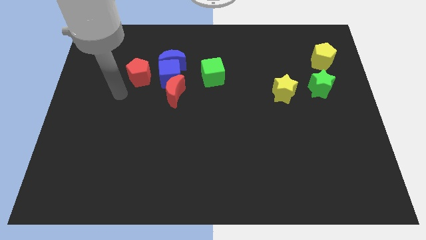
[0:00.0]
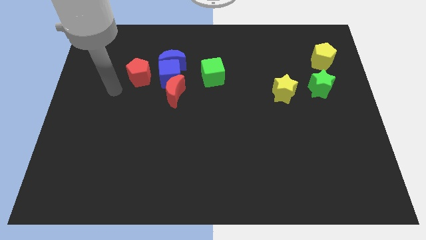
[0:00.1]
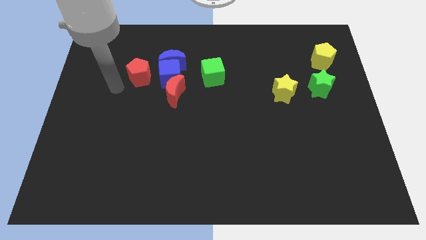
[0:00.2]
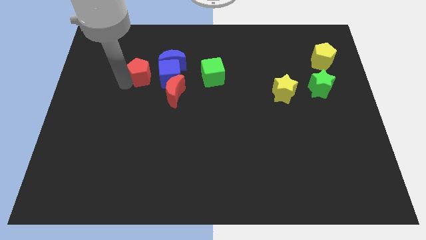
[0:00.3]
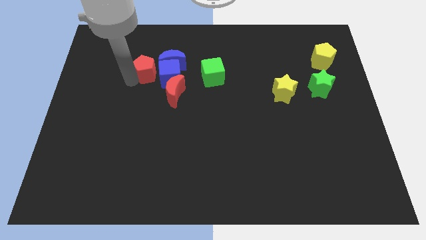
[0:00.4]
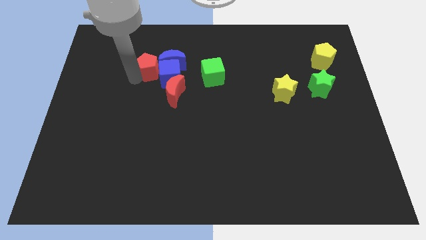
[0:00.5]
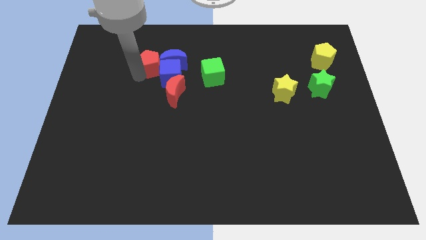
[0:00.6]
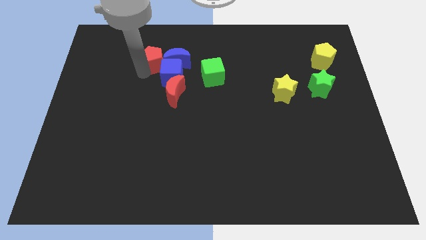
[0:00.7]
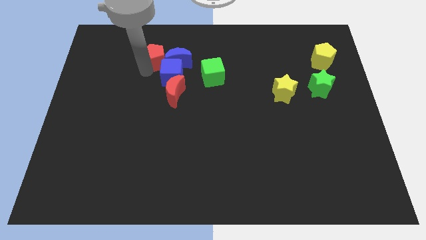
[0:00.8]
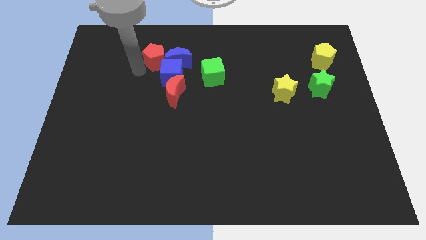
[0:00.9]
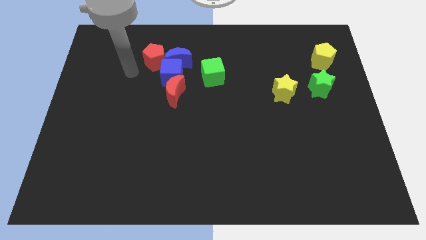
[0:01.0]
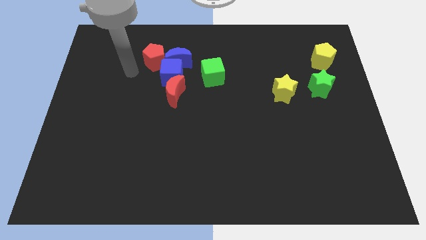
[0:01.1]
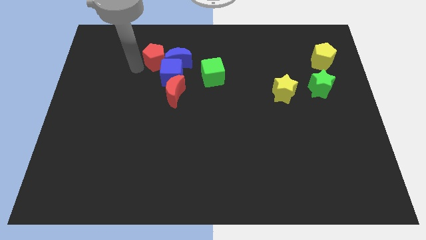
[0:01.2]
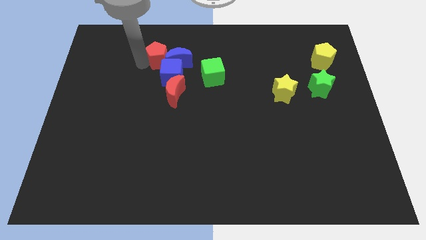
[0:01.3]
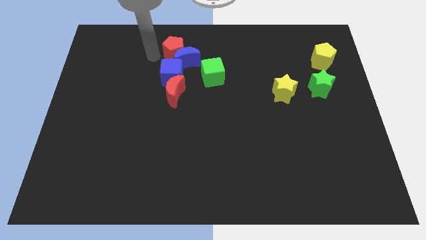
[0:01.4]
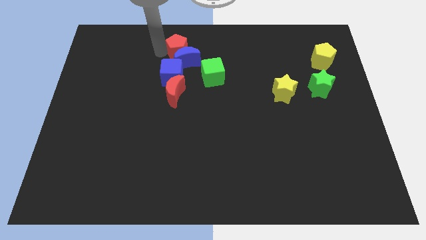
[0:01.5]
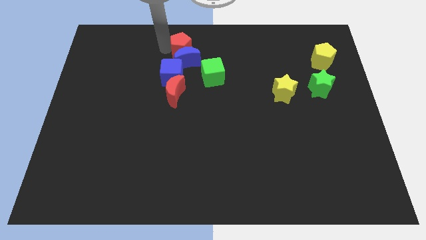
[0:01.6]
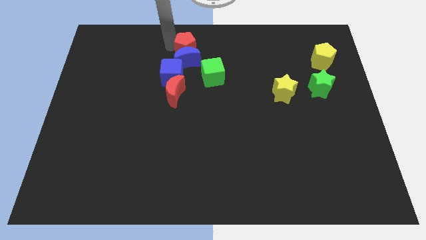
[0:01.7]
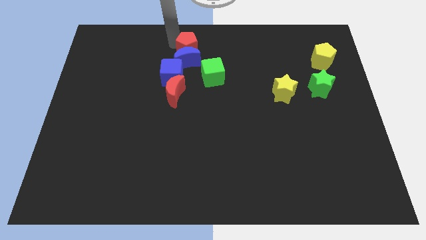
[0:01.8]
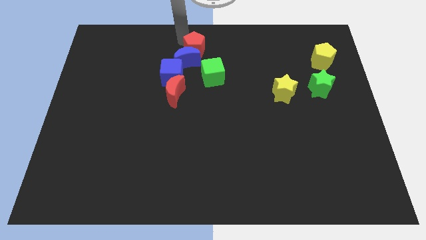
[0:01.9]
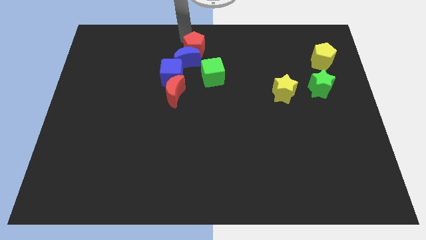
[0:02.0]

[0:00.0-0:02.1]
push the red pentagon to the top center side

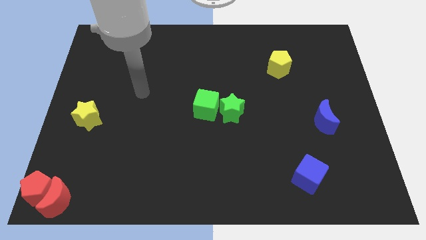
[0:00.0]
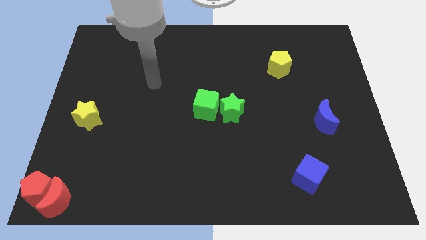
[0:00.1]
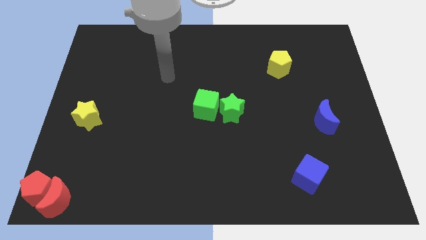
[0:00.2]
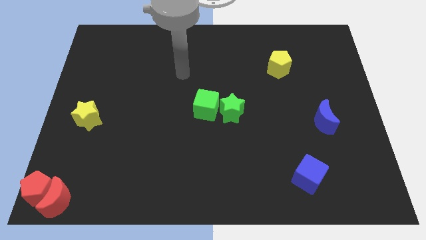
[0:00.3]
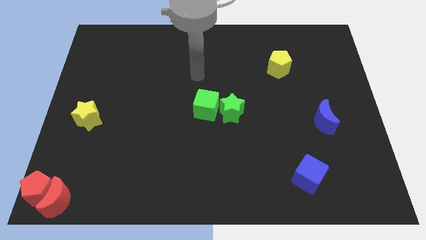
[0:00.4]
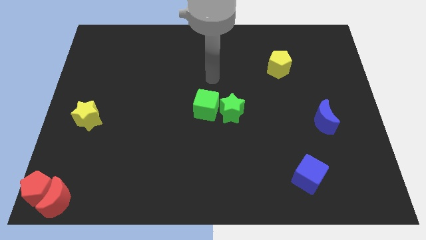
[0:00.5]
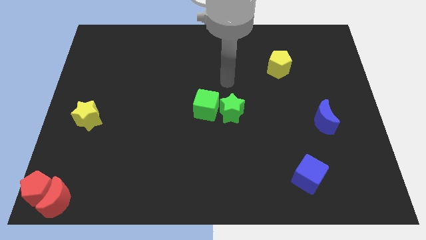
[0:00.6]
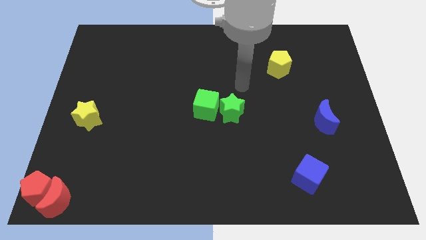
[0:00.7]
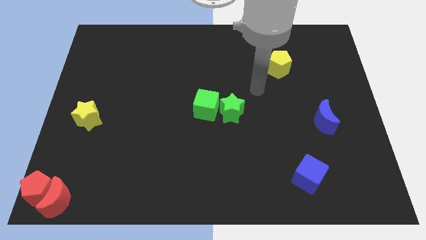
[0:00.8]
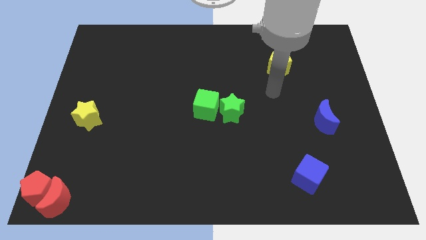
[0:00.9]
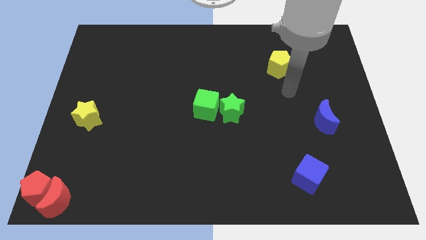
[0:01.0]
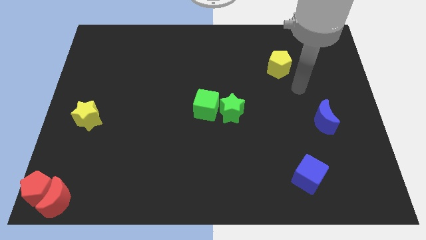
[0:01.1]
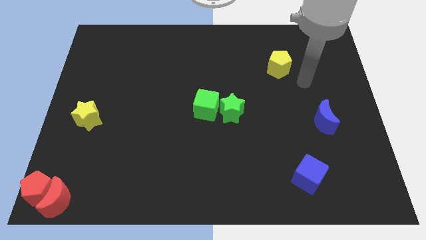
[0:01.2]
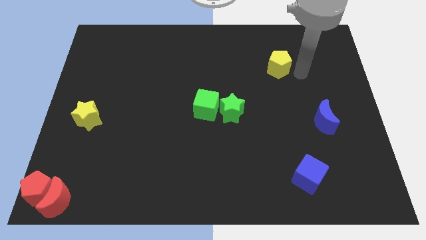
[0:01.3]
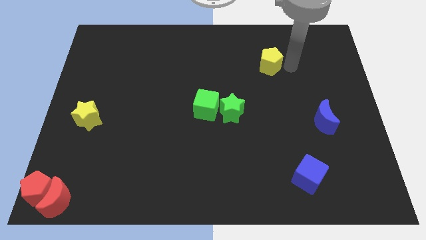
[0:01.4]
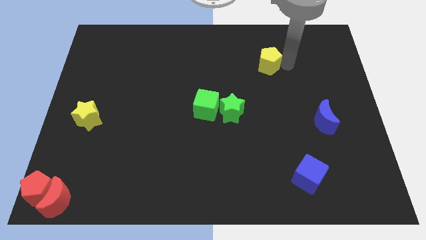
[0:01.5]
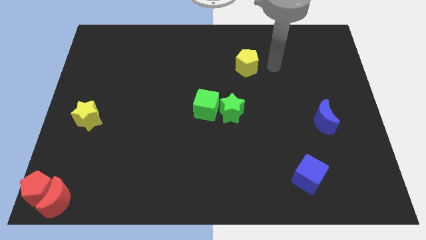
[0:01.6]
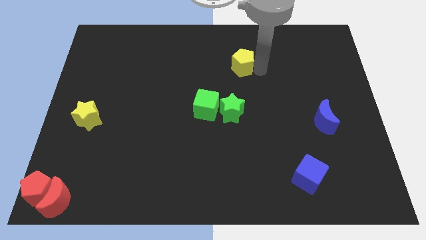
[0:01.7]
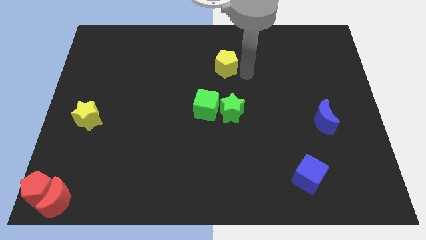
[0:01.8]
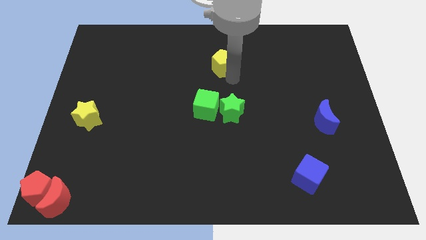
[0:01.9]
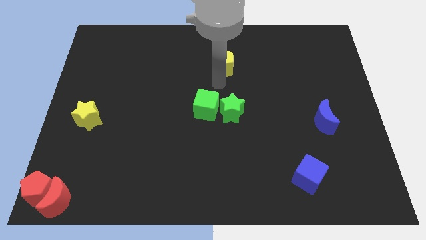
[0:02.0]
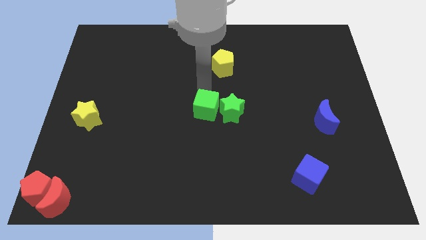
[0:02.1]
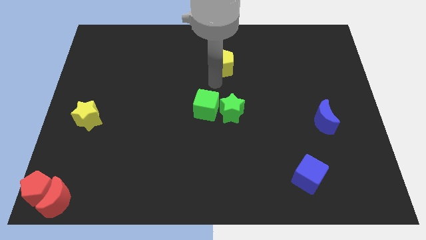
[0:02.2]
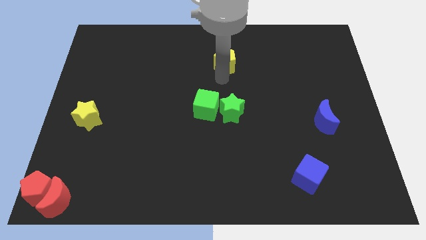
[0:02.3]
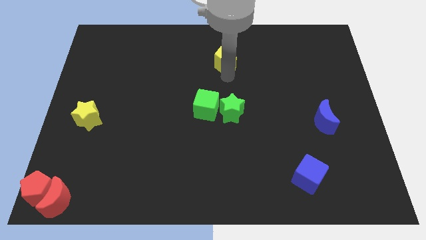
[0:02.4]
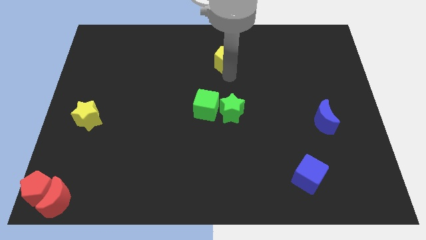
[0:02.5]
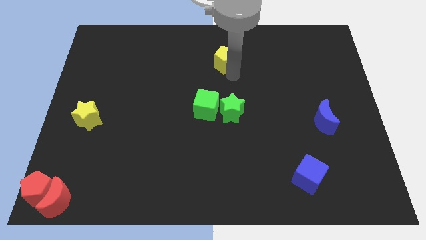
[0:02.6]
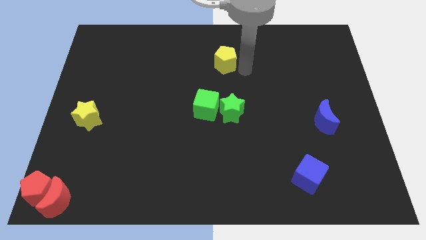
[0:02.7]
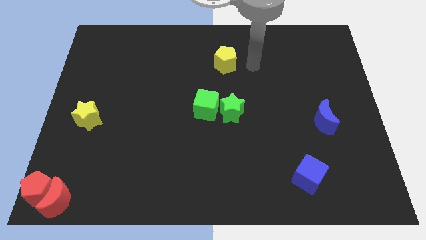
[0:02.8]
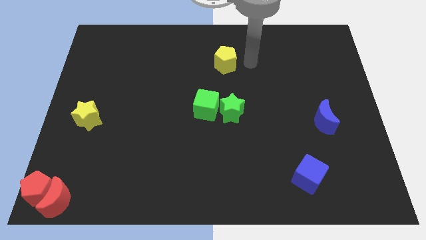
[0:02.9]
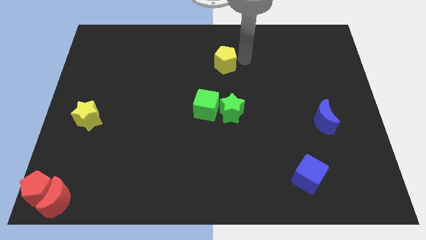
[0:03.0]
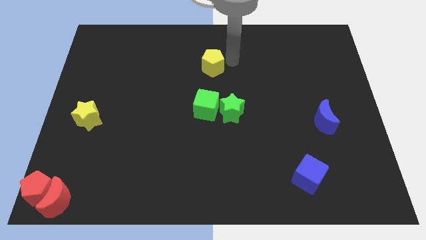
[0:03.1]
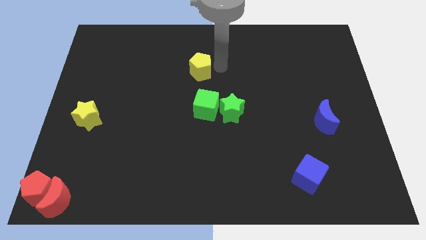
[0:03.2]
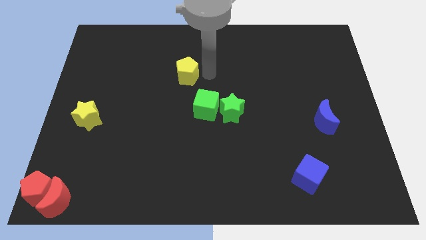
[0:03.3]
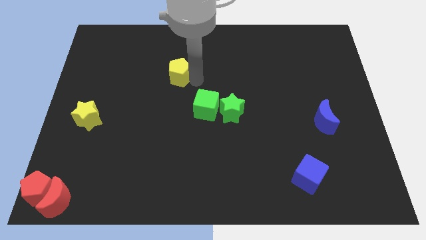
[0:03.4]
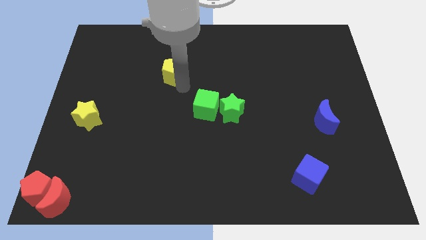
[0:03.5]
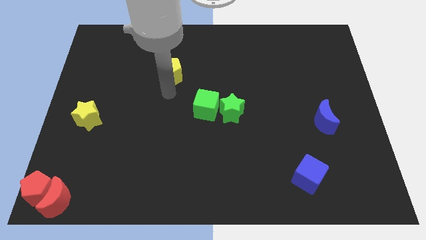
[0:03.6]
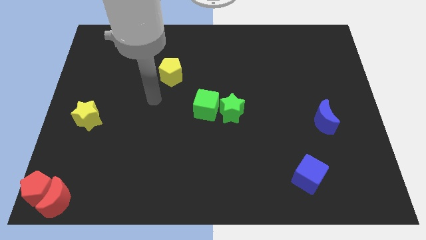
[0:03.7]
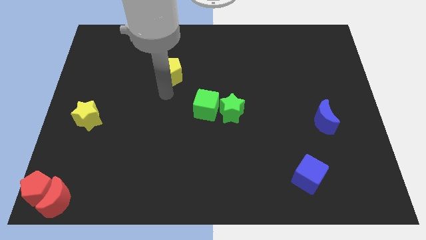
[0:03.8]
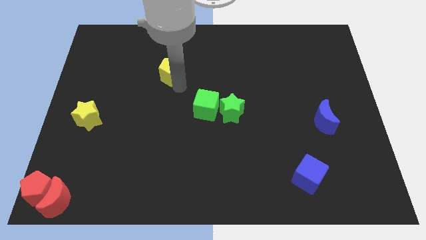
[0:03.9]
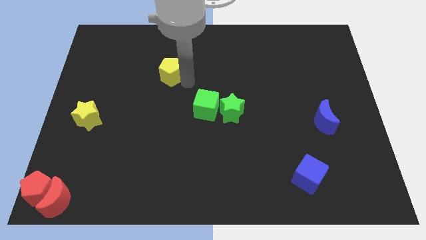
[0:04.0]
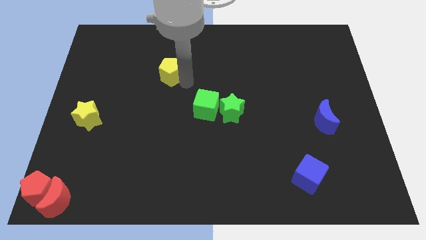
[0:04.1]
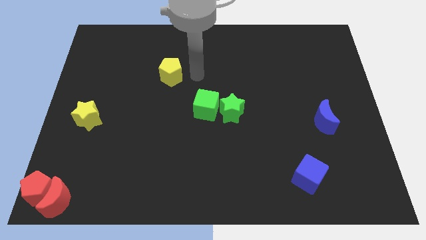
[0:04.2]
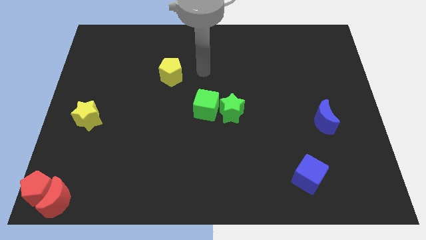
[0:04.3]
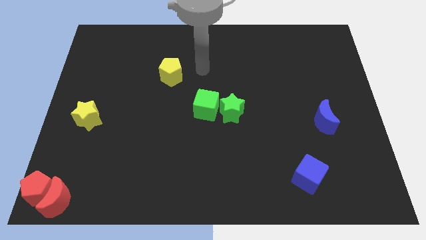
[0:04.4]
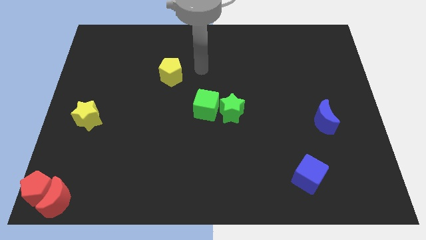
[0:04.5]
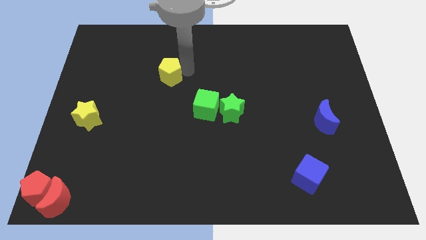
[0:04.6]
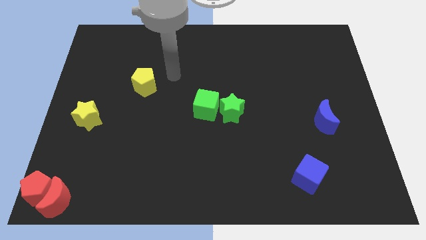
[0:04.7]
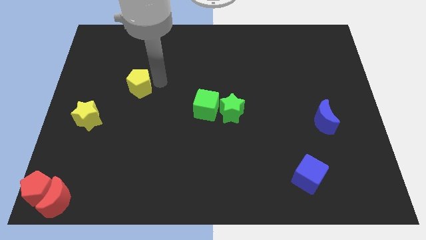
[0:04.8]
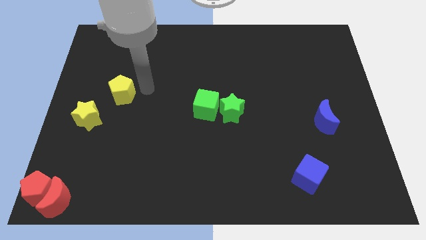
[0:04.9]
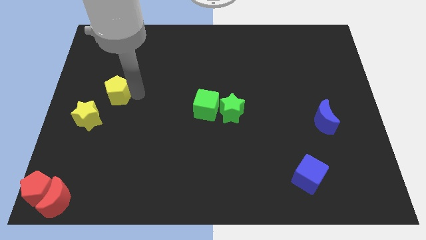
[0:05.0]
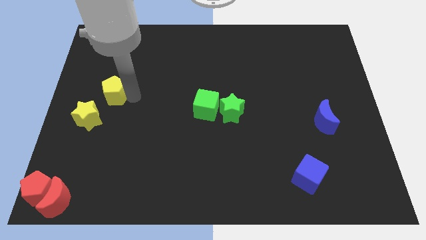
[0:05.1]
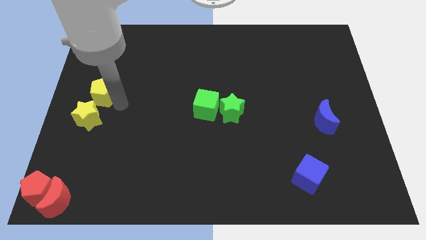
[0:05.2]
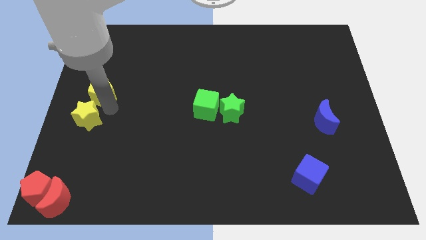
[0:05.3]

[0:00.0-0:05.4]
move the yellow pentagon towards the center left of the board

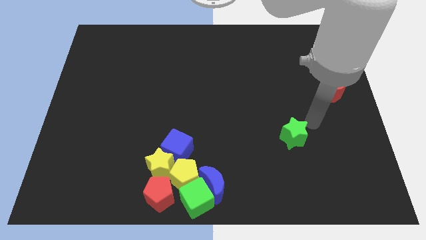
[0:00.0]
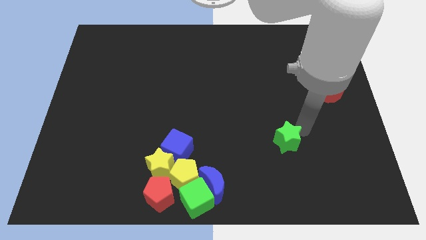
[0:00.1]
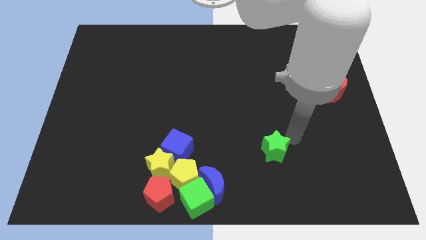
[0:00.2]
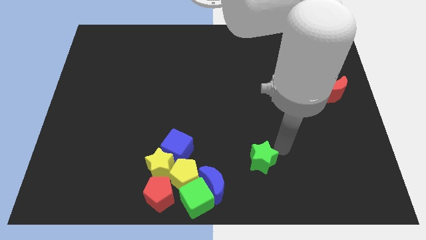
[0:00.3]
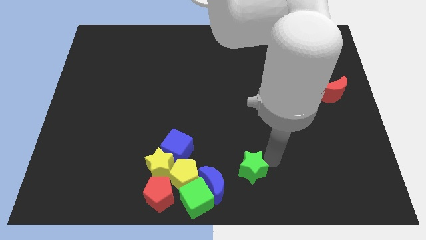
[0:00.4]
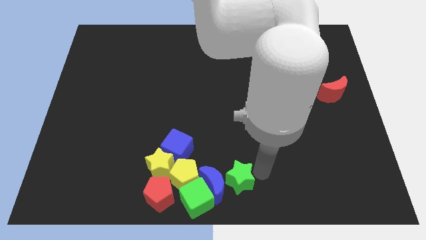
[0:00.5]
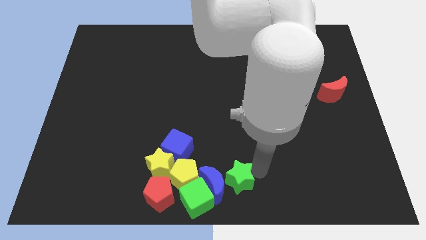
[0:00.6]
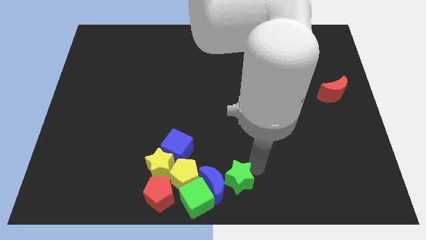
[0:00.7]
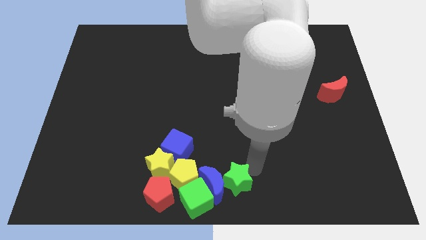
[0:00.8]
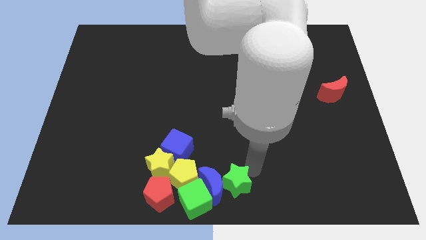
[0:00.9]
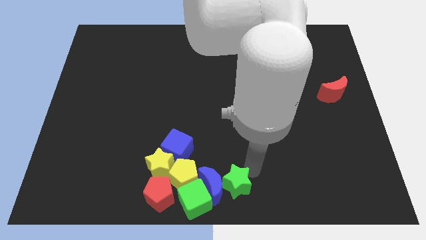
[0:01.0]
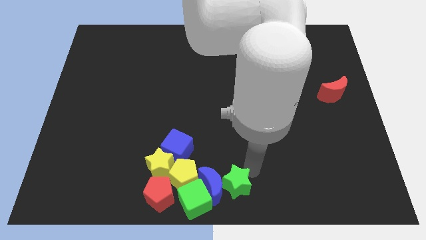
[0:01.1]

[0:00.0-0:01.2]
place green star to the right of the blue moon

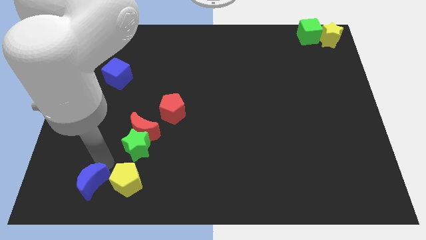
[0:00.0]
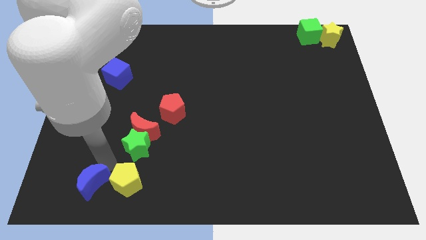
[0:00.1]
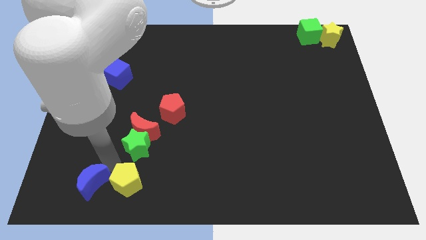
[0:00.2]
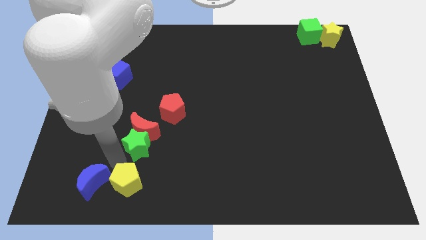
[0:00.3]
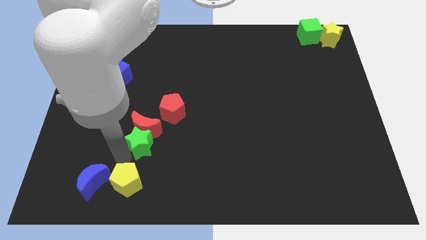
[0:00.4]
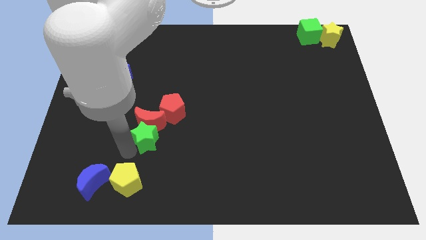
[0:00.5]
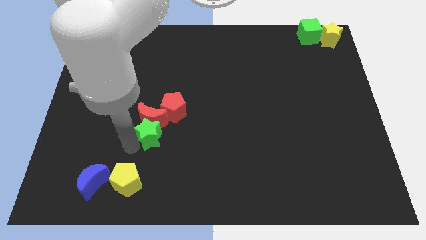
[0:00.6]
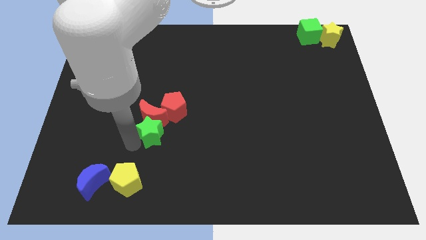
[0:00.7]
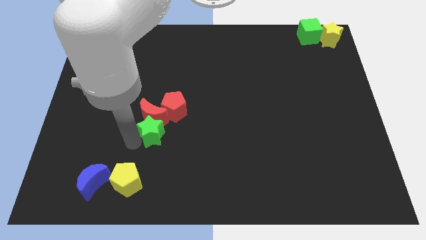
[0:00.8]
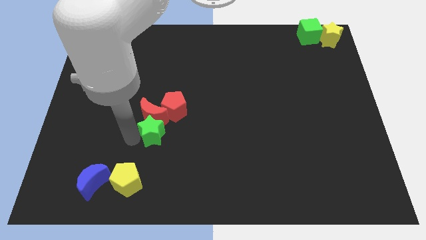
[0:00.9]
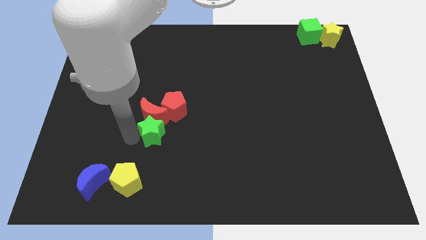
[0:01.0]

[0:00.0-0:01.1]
push the green star and red moon into the red pentagon
